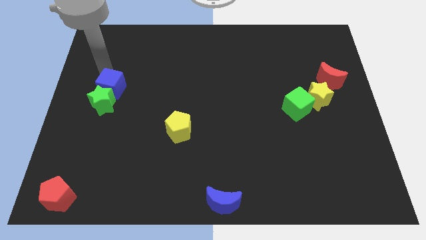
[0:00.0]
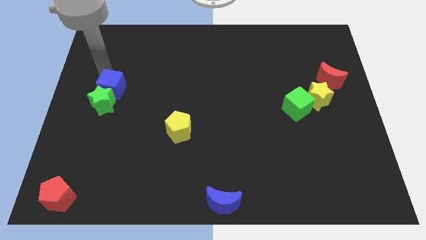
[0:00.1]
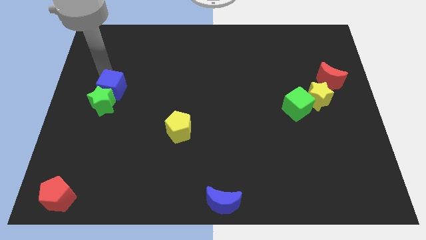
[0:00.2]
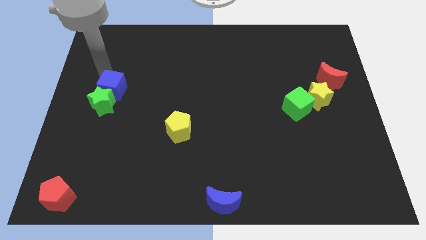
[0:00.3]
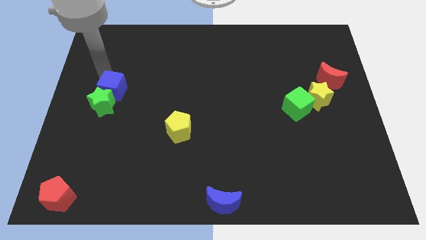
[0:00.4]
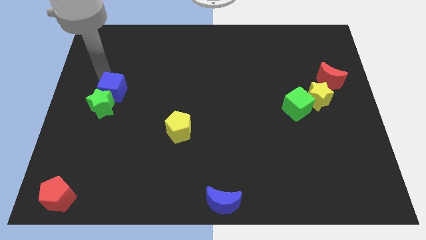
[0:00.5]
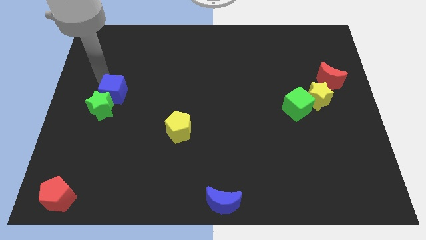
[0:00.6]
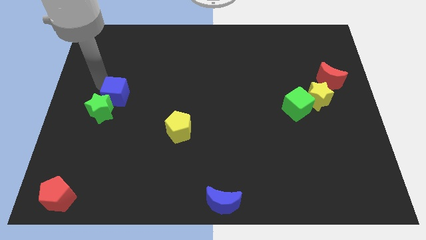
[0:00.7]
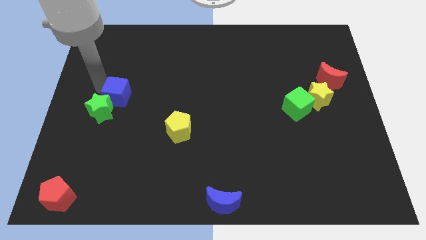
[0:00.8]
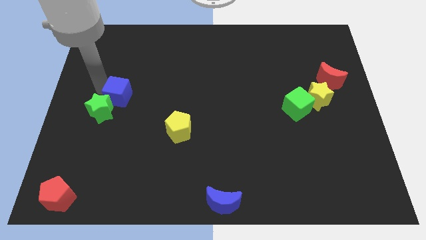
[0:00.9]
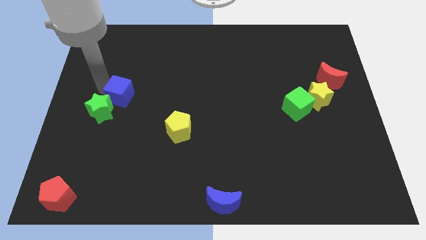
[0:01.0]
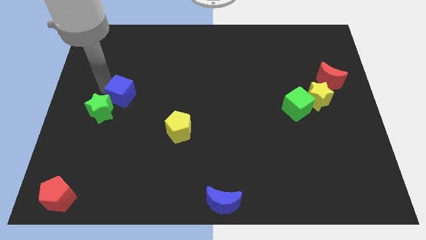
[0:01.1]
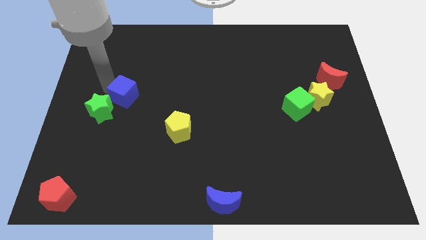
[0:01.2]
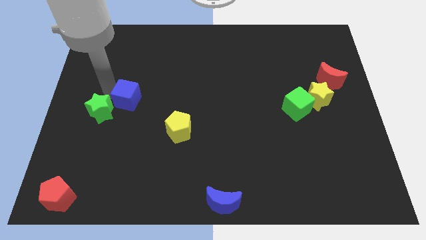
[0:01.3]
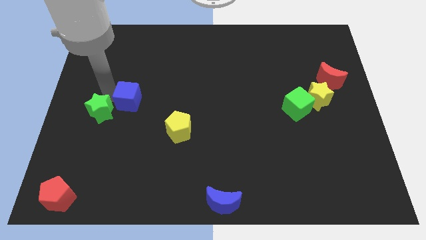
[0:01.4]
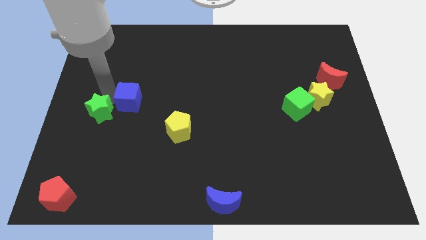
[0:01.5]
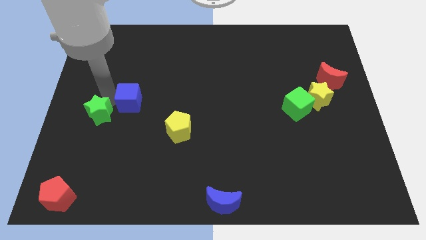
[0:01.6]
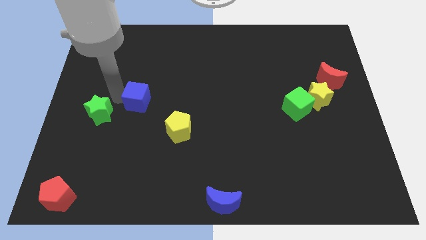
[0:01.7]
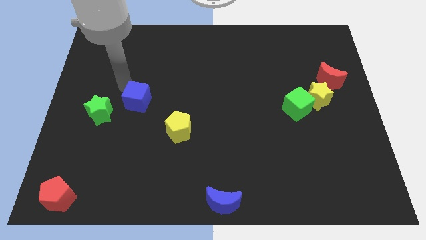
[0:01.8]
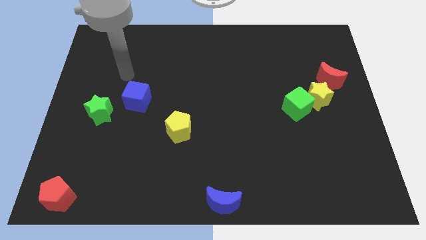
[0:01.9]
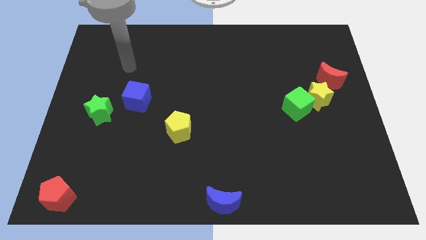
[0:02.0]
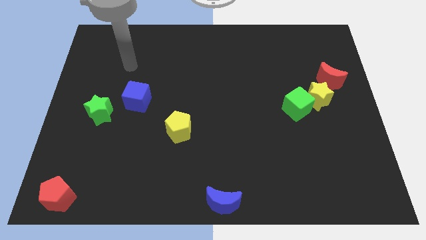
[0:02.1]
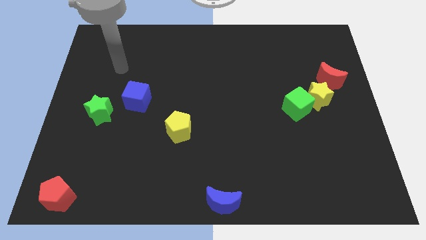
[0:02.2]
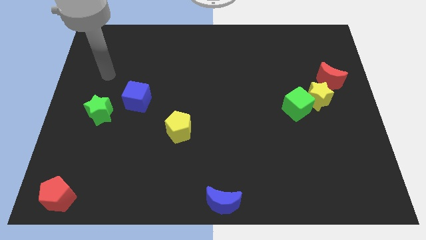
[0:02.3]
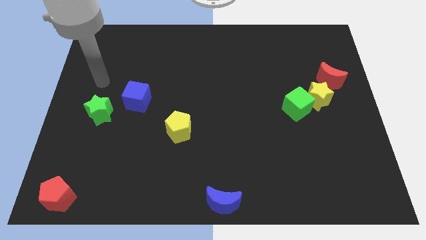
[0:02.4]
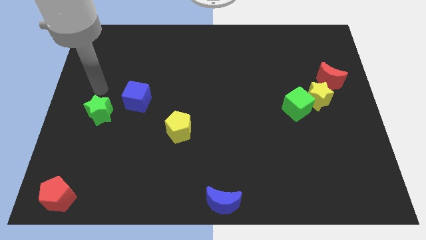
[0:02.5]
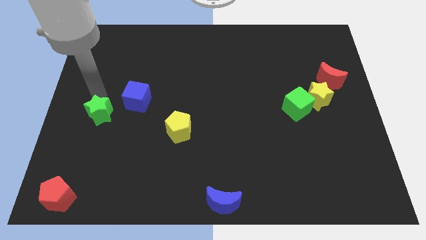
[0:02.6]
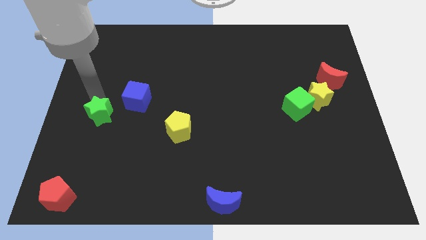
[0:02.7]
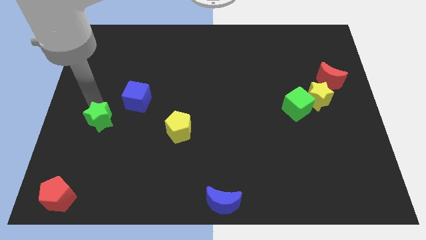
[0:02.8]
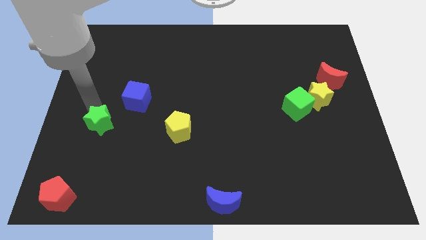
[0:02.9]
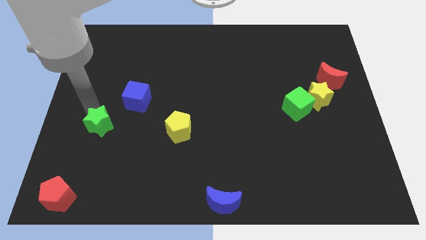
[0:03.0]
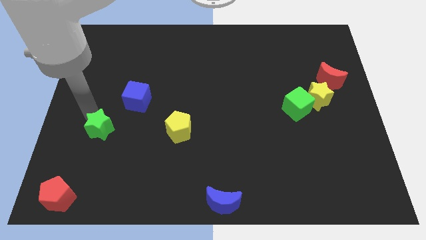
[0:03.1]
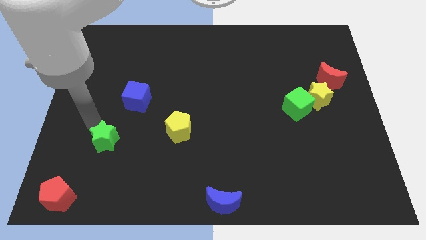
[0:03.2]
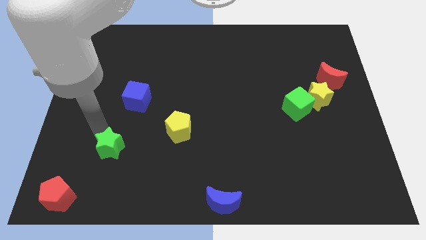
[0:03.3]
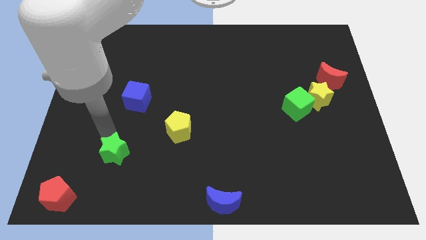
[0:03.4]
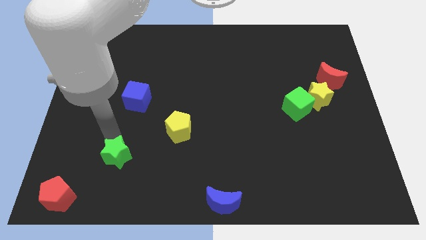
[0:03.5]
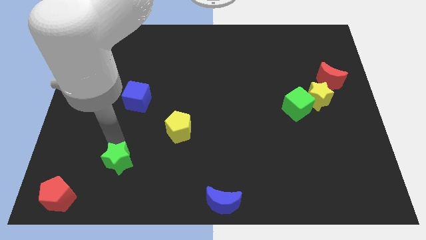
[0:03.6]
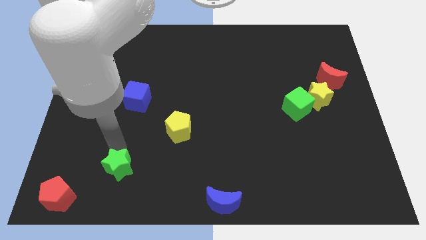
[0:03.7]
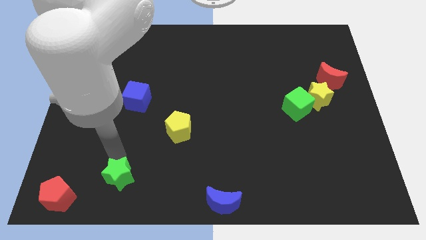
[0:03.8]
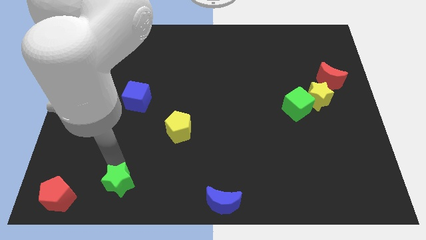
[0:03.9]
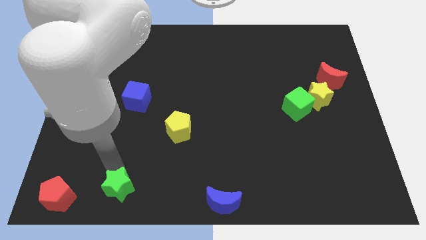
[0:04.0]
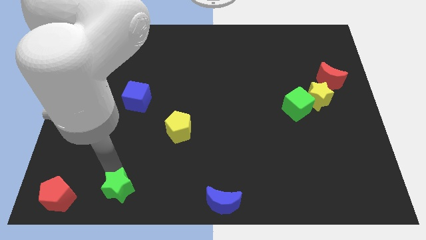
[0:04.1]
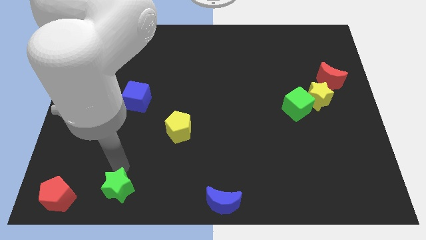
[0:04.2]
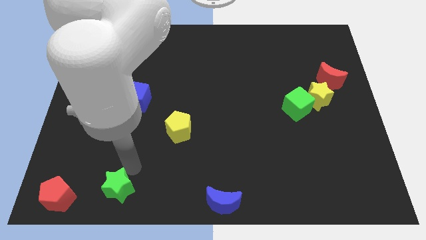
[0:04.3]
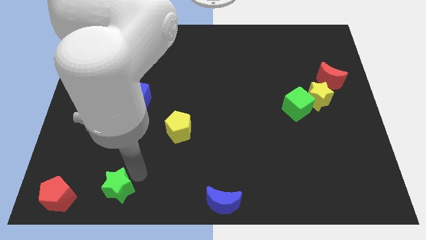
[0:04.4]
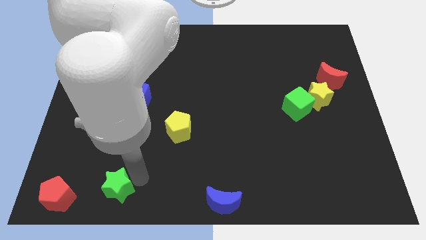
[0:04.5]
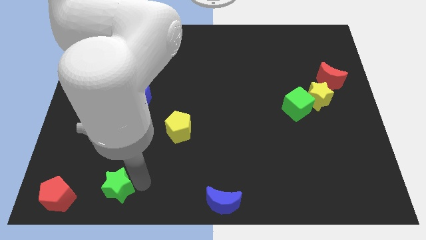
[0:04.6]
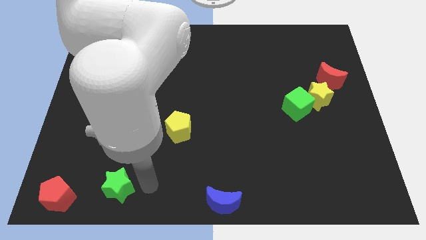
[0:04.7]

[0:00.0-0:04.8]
push green star to the bottom left

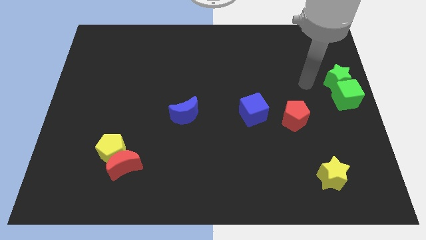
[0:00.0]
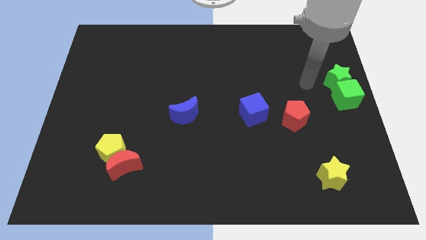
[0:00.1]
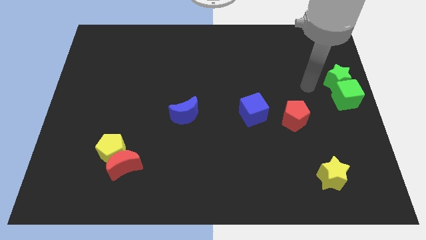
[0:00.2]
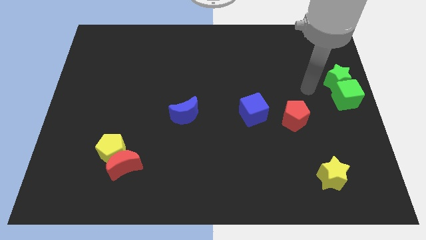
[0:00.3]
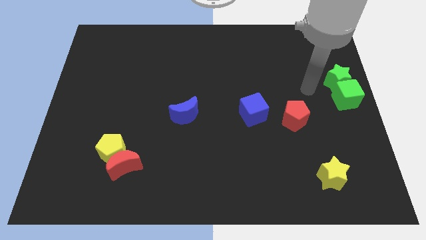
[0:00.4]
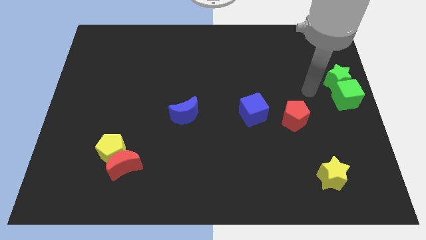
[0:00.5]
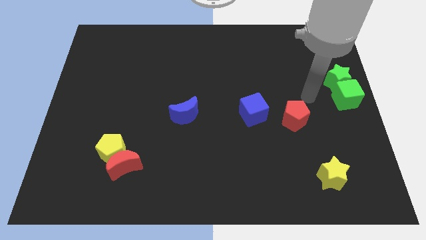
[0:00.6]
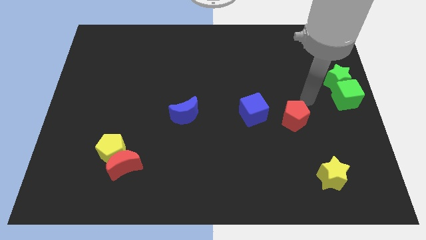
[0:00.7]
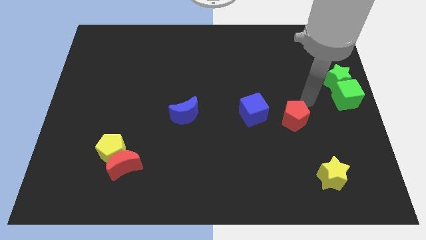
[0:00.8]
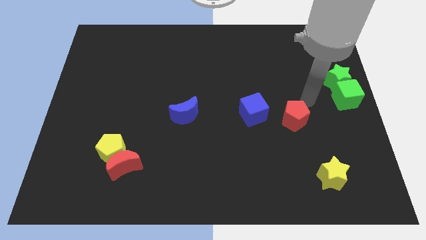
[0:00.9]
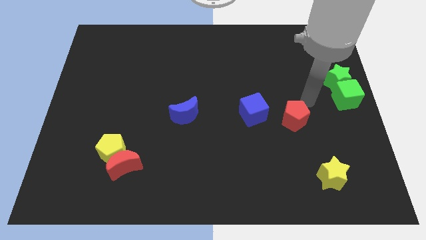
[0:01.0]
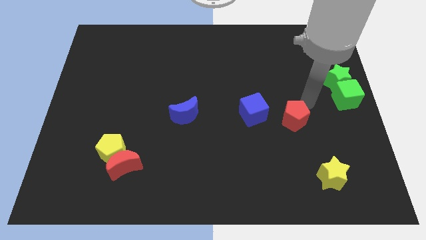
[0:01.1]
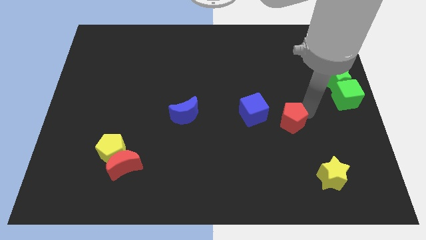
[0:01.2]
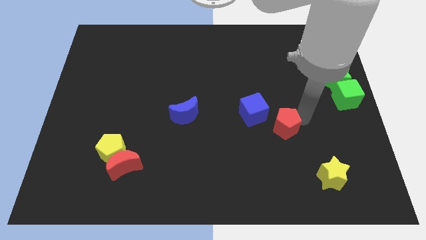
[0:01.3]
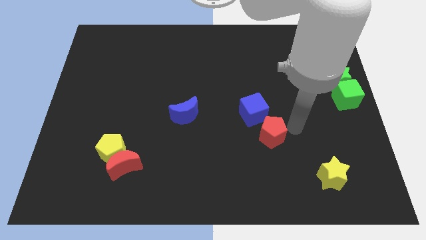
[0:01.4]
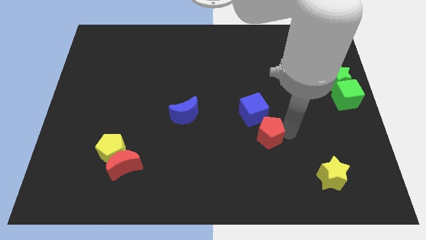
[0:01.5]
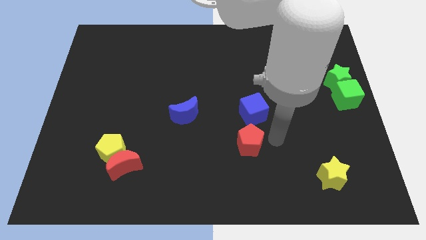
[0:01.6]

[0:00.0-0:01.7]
put the red pentagon vertically below the blue cube

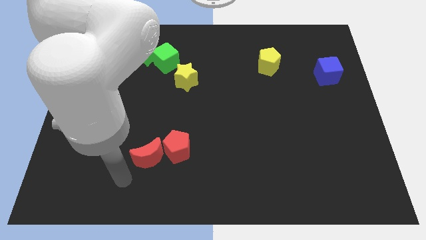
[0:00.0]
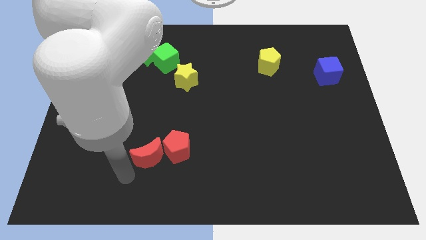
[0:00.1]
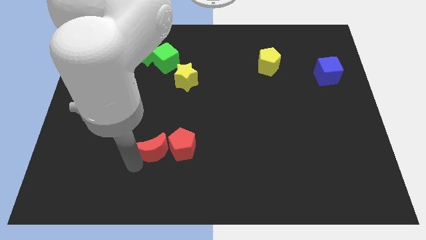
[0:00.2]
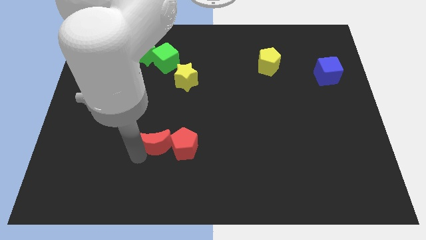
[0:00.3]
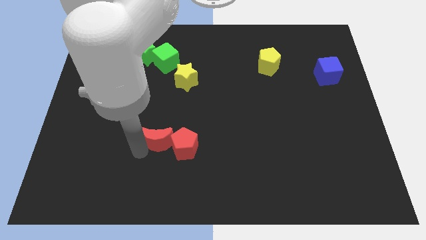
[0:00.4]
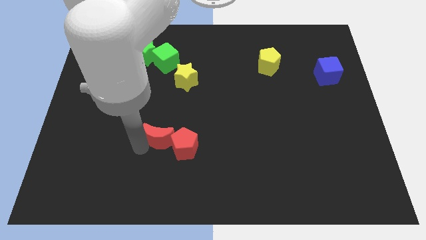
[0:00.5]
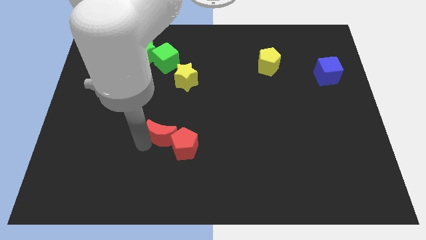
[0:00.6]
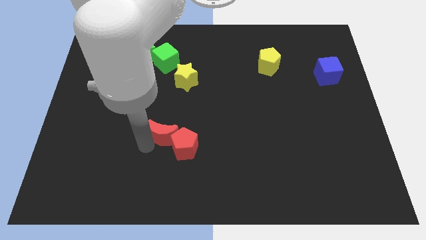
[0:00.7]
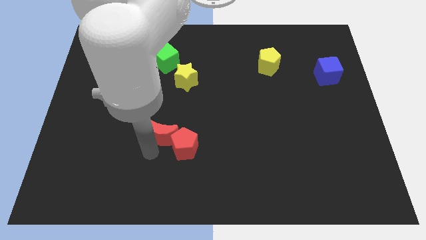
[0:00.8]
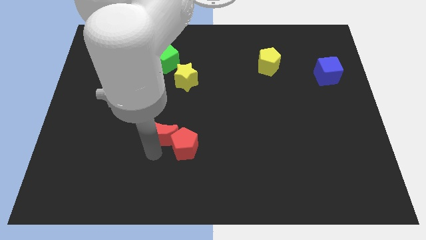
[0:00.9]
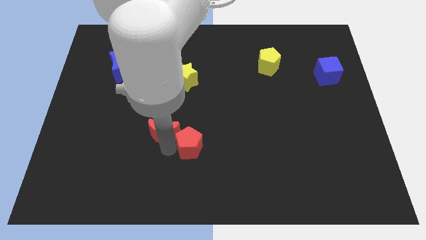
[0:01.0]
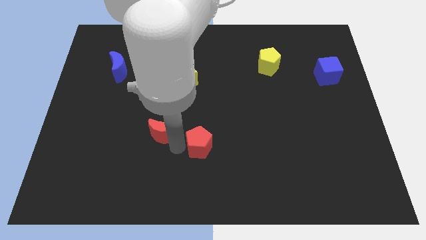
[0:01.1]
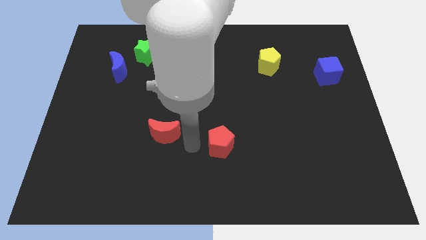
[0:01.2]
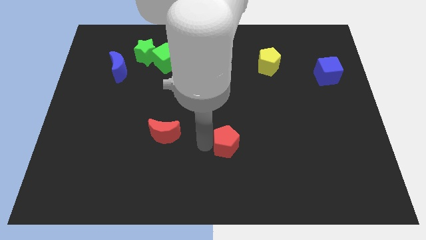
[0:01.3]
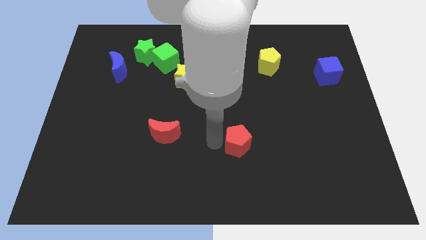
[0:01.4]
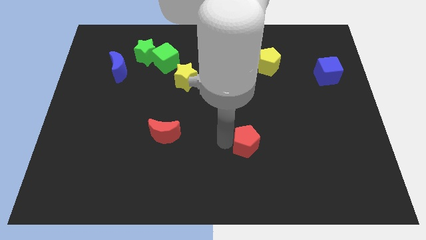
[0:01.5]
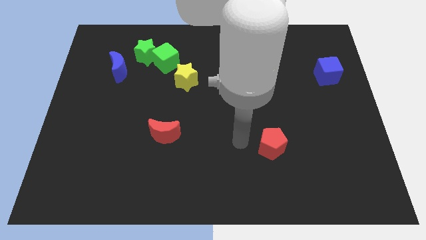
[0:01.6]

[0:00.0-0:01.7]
push red pentagon to the right side of the board

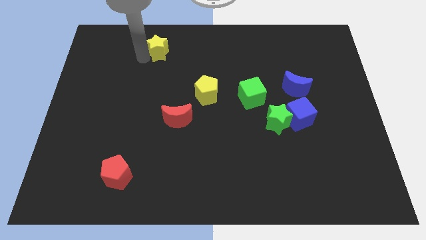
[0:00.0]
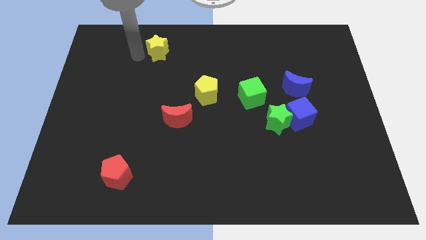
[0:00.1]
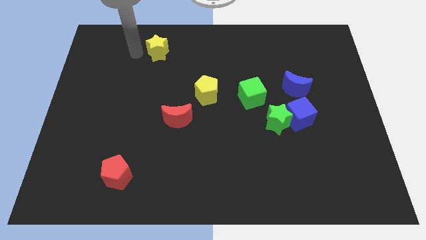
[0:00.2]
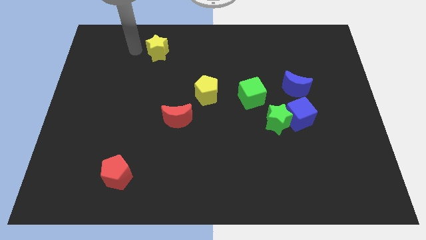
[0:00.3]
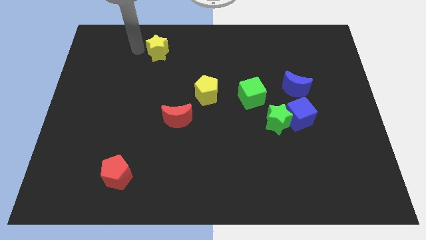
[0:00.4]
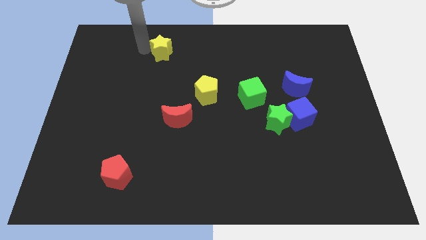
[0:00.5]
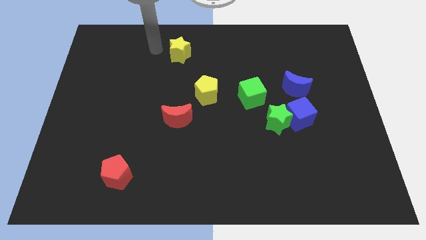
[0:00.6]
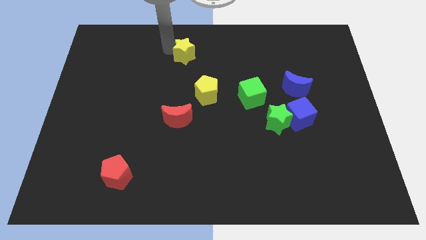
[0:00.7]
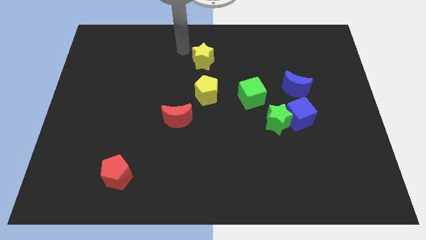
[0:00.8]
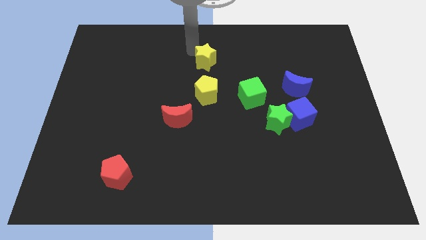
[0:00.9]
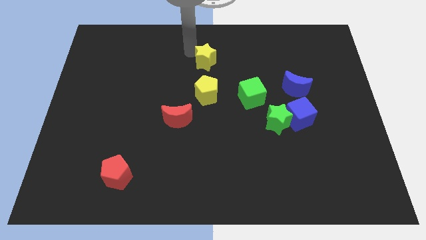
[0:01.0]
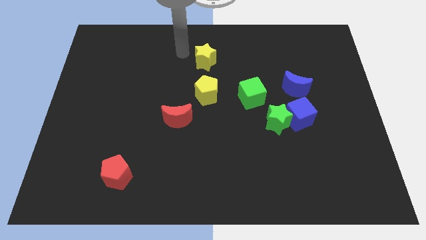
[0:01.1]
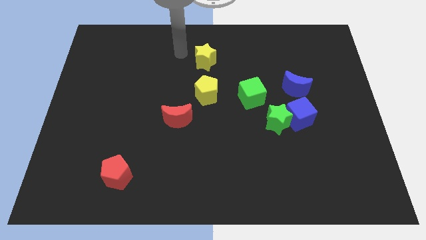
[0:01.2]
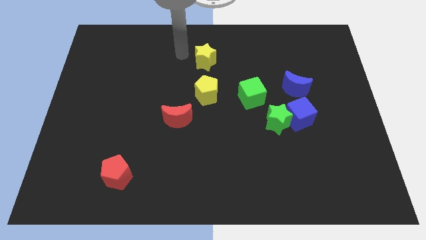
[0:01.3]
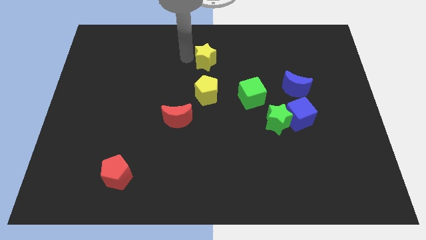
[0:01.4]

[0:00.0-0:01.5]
place the yellow star slighty towards the top center of the board
